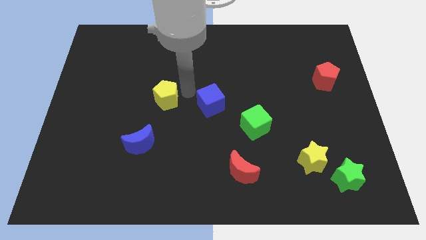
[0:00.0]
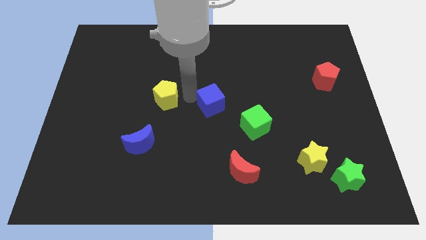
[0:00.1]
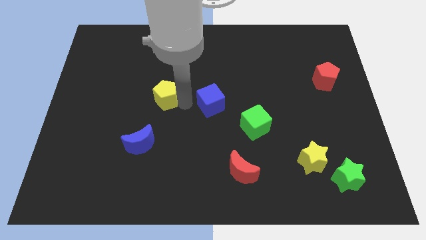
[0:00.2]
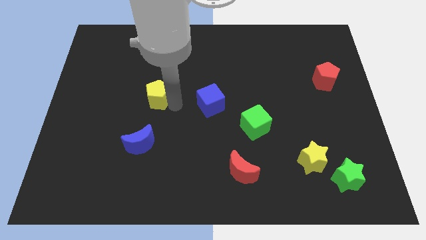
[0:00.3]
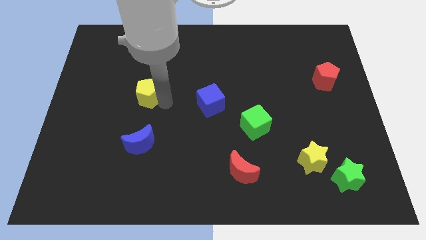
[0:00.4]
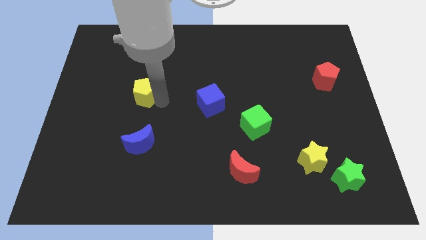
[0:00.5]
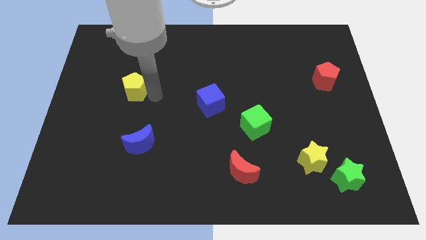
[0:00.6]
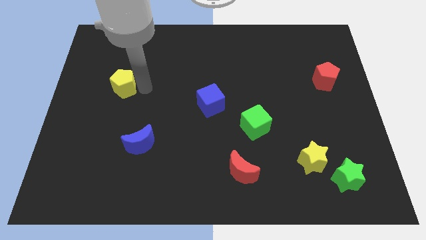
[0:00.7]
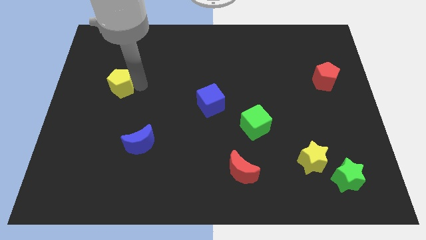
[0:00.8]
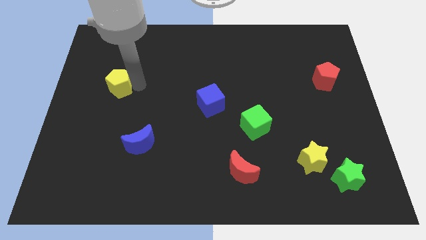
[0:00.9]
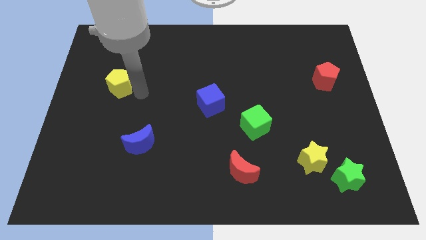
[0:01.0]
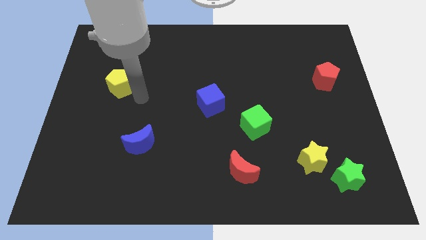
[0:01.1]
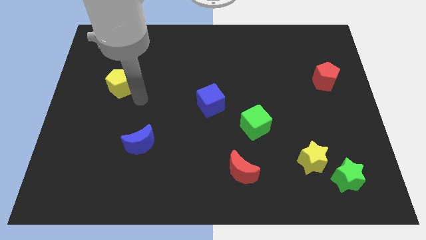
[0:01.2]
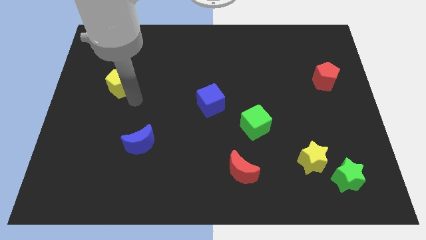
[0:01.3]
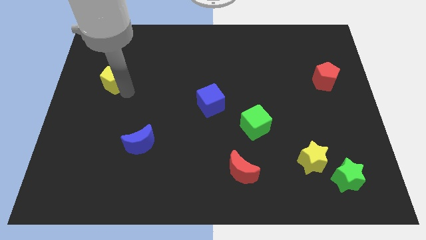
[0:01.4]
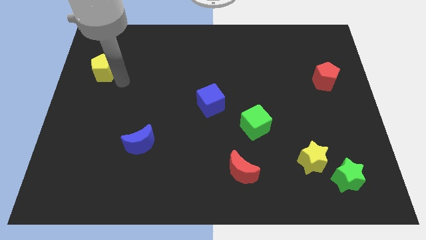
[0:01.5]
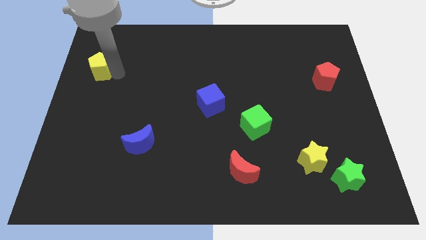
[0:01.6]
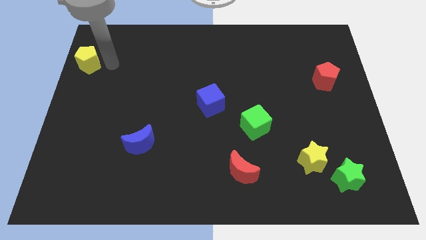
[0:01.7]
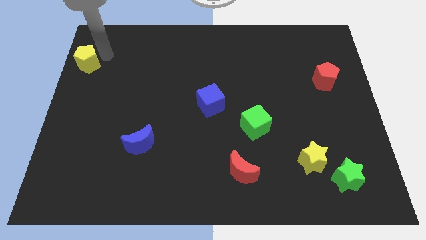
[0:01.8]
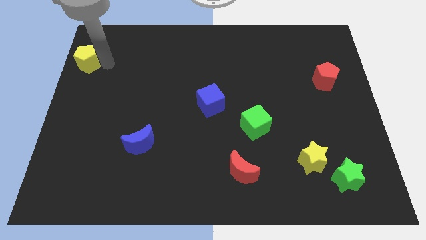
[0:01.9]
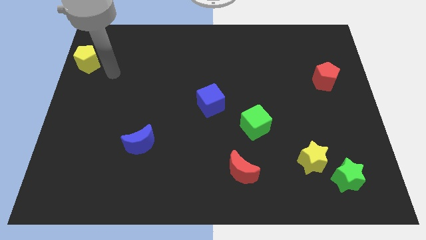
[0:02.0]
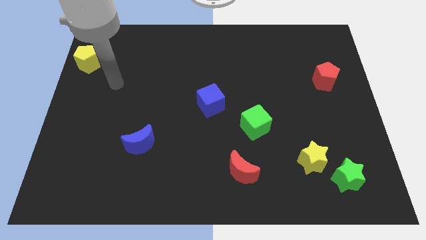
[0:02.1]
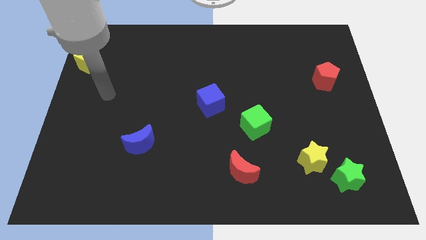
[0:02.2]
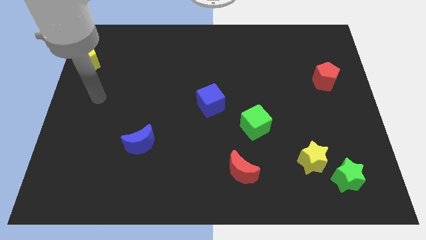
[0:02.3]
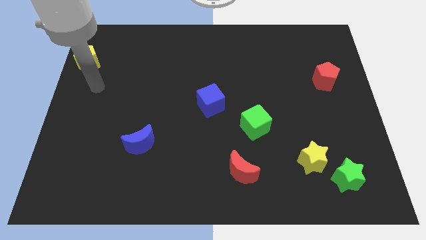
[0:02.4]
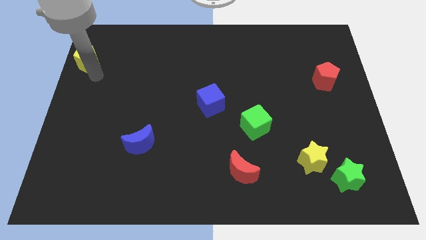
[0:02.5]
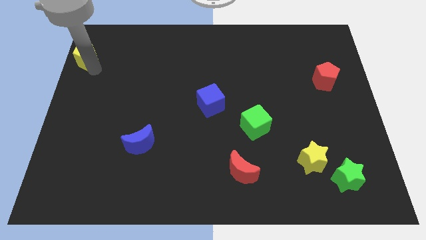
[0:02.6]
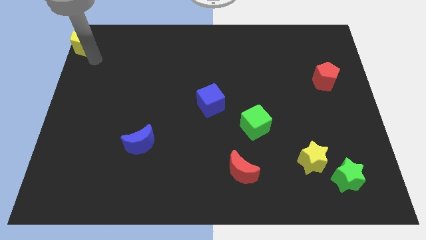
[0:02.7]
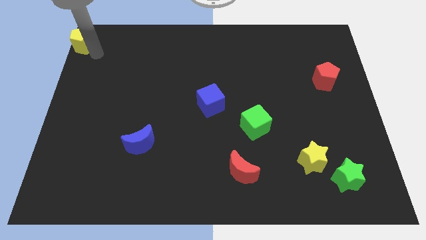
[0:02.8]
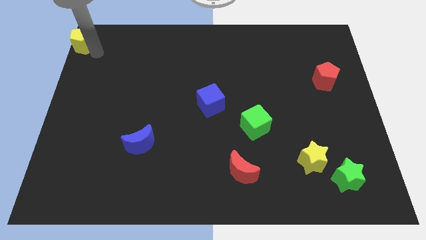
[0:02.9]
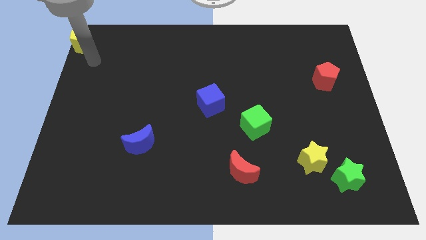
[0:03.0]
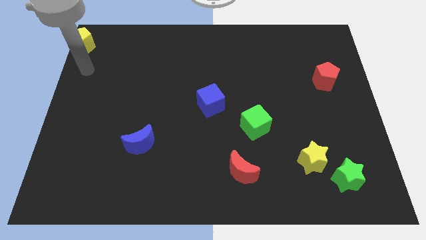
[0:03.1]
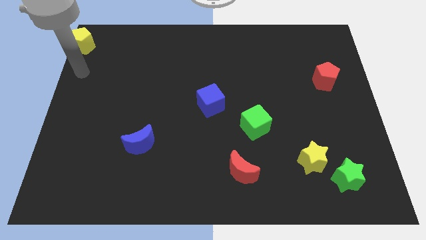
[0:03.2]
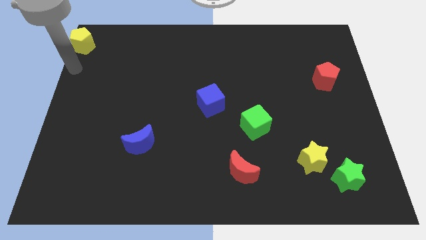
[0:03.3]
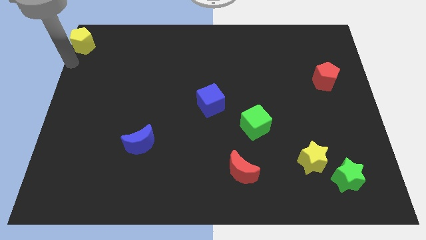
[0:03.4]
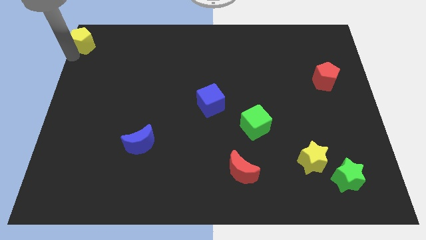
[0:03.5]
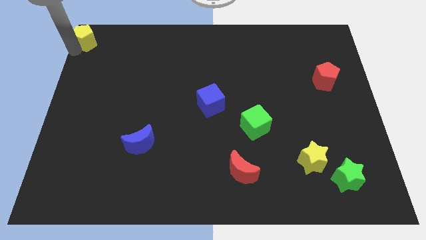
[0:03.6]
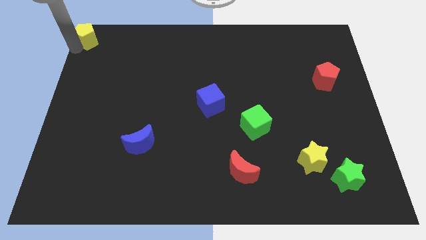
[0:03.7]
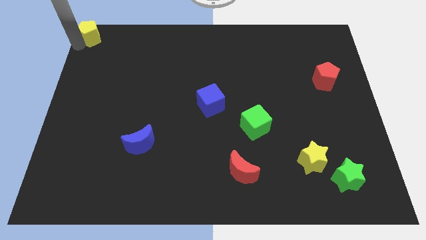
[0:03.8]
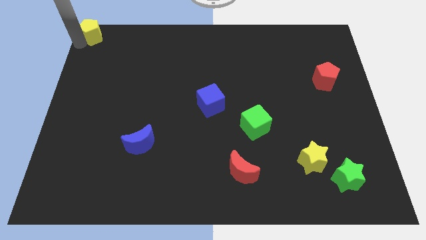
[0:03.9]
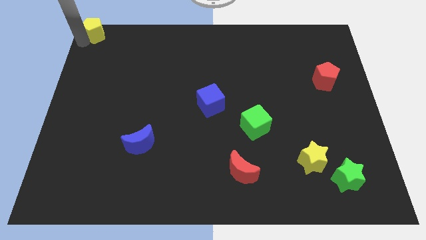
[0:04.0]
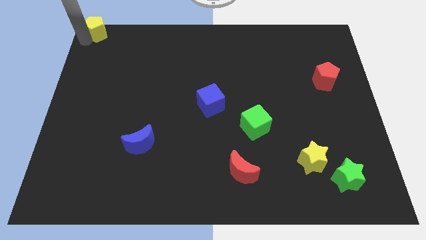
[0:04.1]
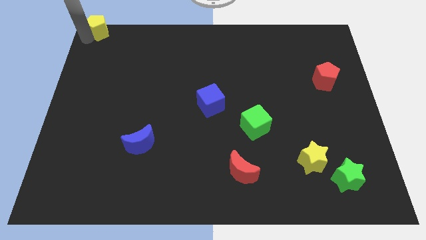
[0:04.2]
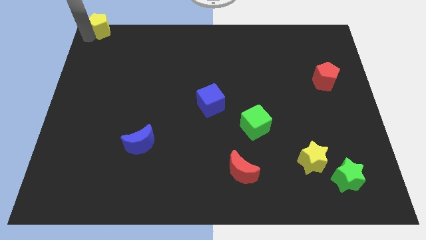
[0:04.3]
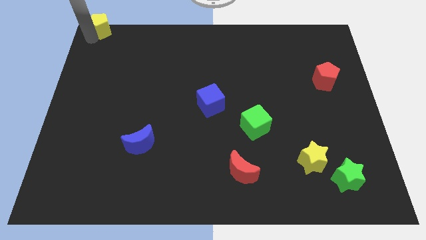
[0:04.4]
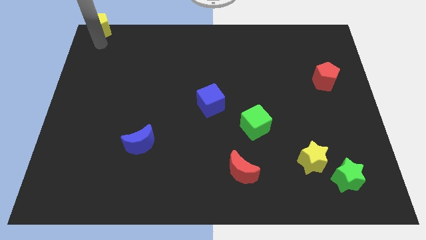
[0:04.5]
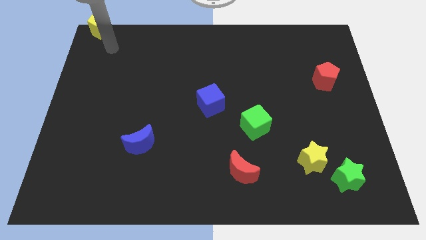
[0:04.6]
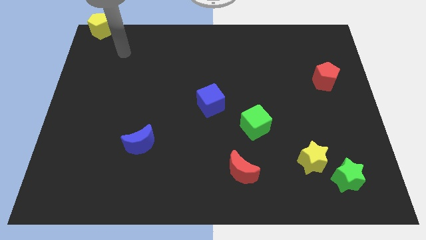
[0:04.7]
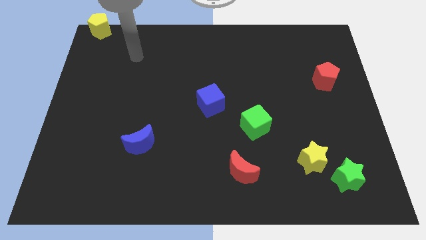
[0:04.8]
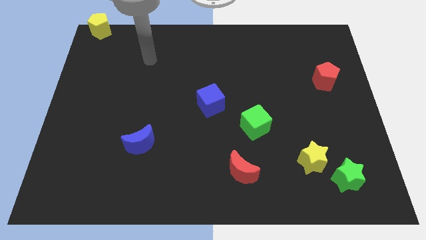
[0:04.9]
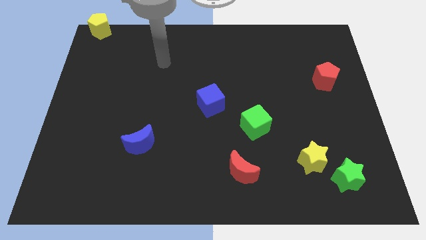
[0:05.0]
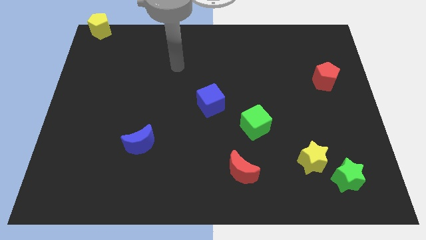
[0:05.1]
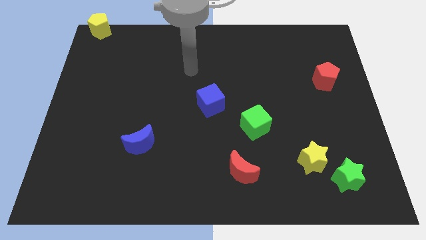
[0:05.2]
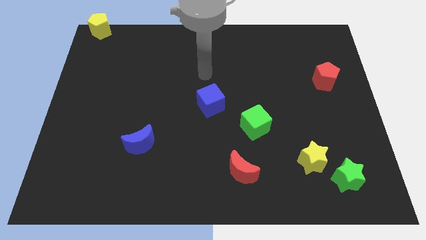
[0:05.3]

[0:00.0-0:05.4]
move the yellow pentagon to the top left corner

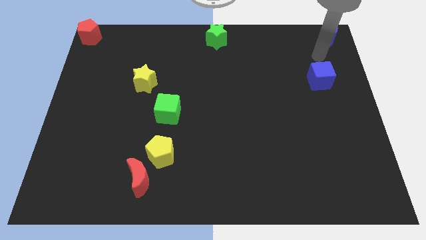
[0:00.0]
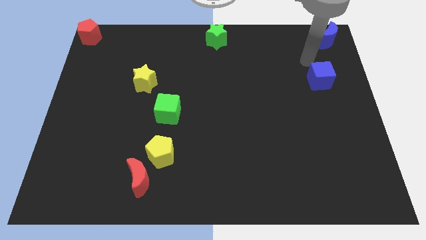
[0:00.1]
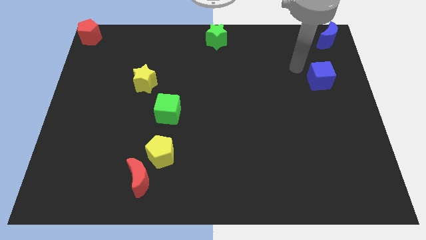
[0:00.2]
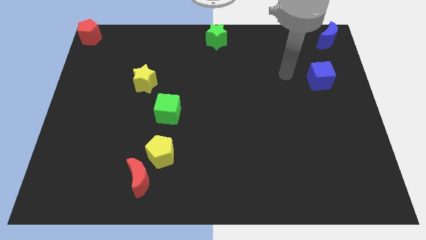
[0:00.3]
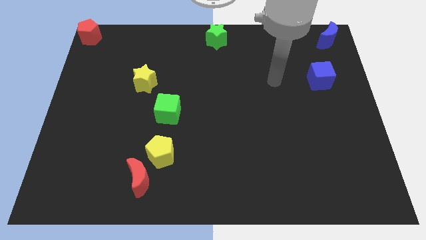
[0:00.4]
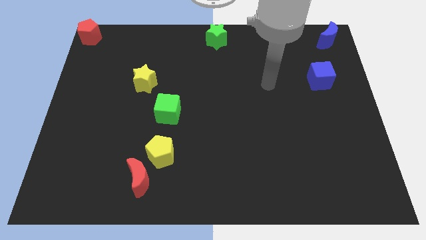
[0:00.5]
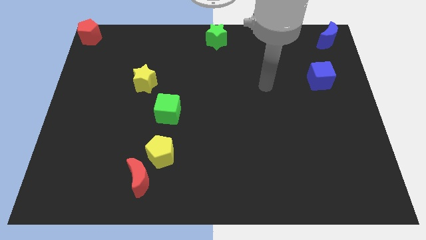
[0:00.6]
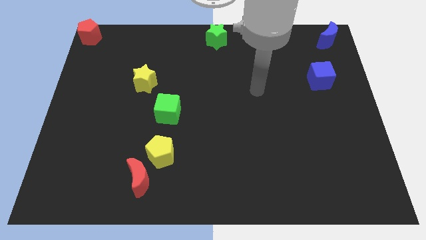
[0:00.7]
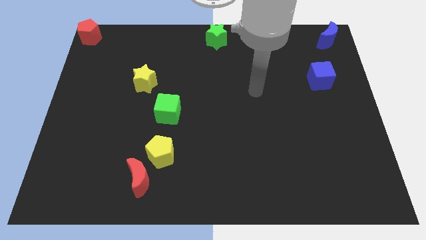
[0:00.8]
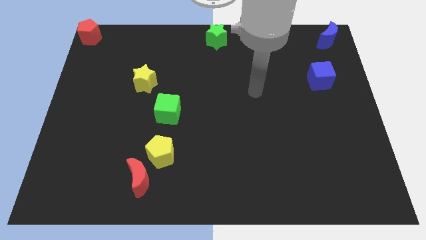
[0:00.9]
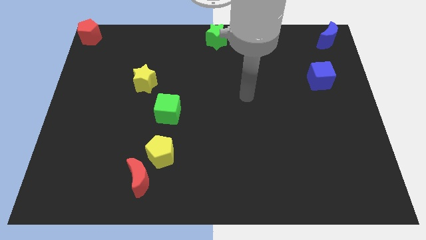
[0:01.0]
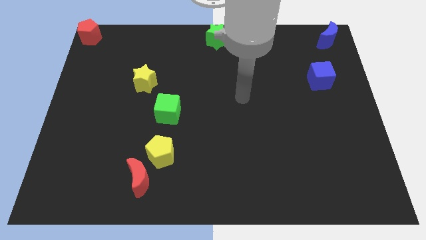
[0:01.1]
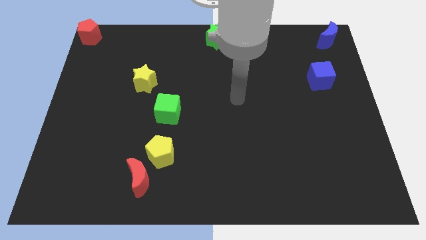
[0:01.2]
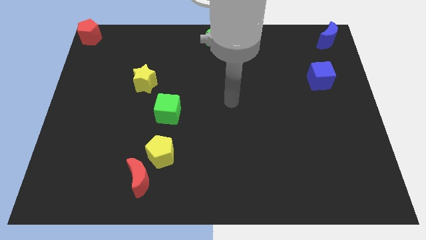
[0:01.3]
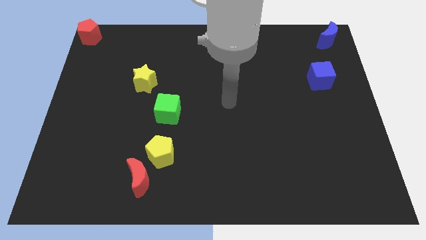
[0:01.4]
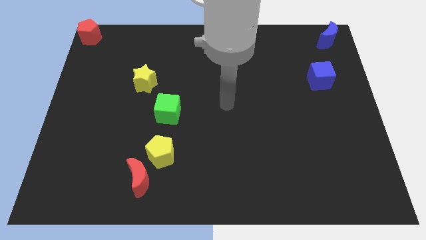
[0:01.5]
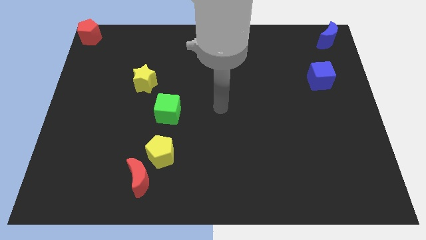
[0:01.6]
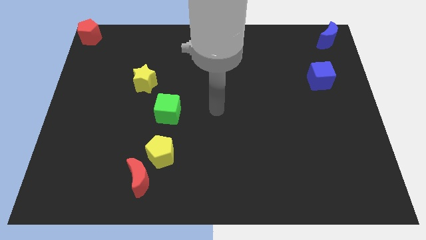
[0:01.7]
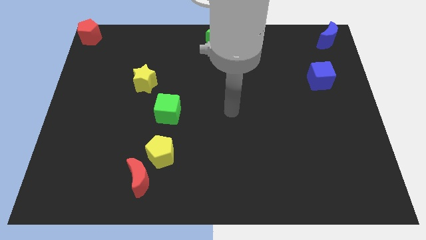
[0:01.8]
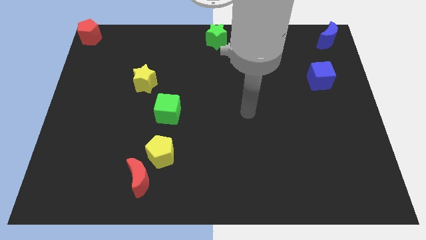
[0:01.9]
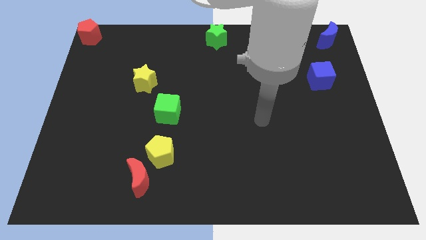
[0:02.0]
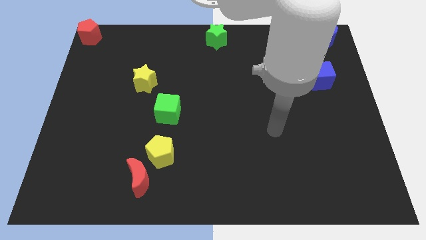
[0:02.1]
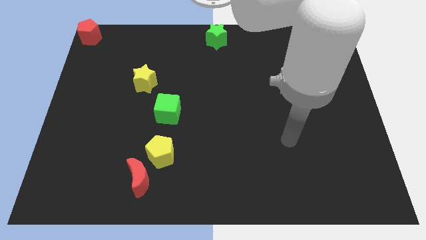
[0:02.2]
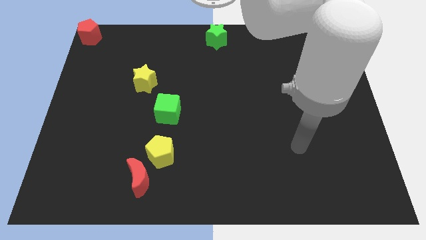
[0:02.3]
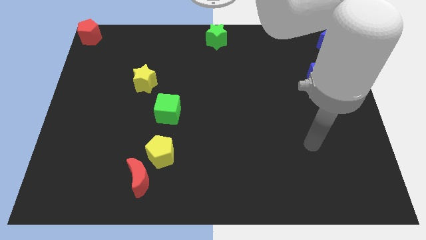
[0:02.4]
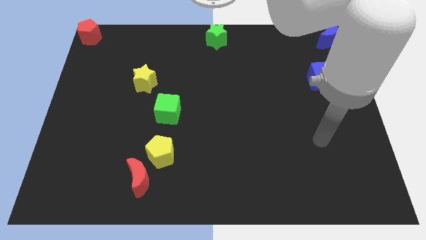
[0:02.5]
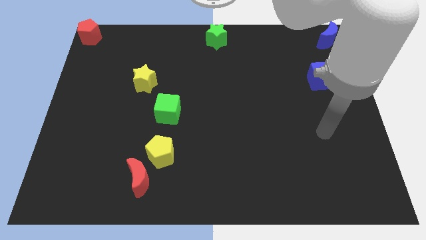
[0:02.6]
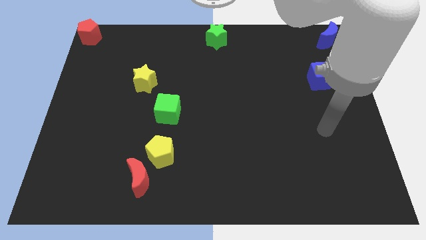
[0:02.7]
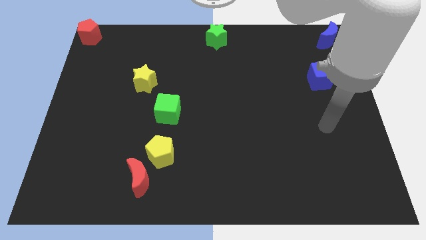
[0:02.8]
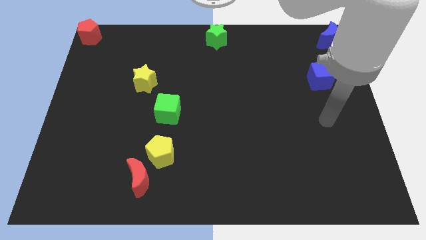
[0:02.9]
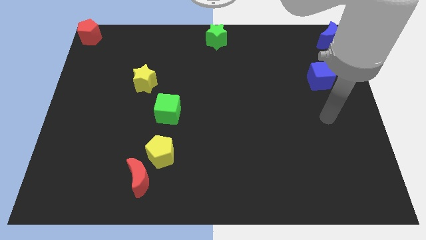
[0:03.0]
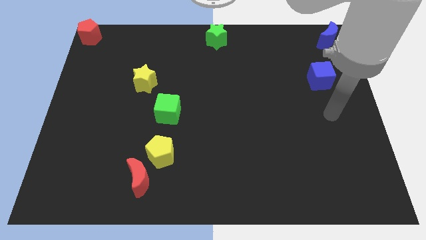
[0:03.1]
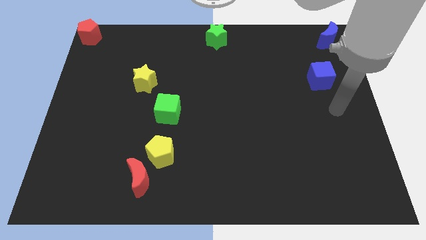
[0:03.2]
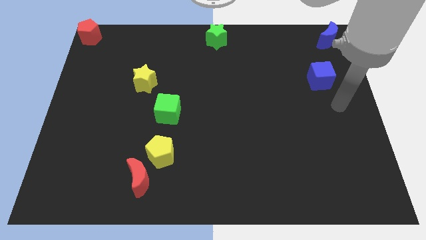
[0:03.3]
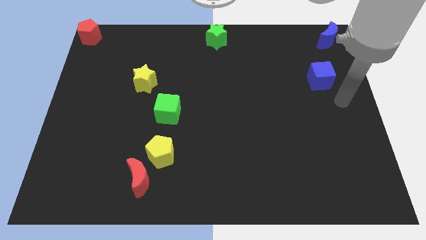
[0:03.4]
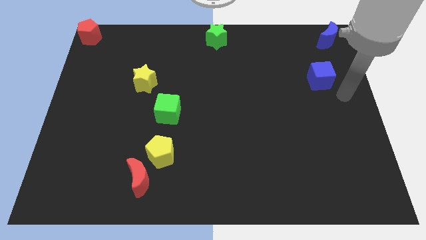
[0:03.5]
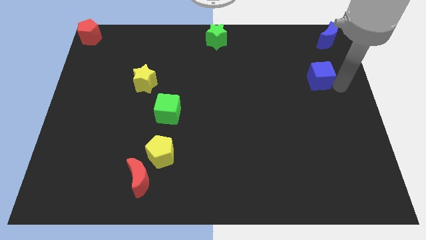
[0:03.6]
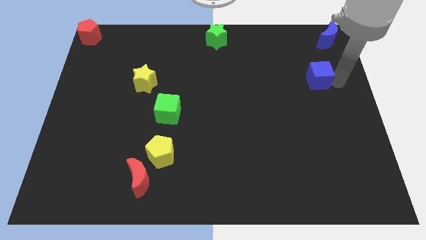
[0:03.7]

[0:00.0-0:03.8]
place the arm towards the right side of the blue cube
